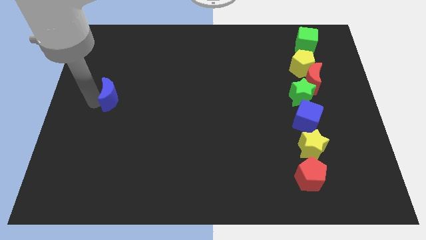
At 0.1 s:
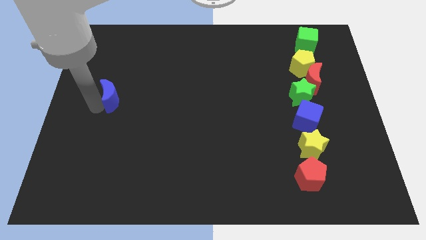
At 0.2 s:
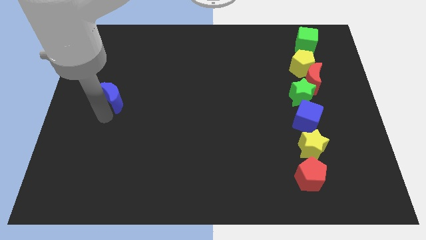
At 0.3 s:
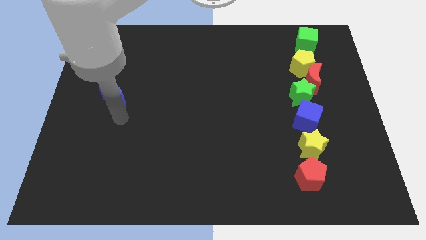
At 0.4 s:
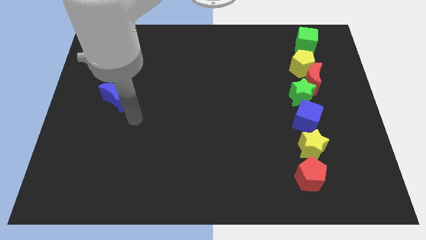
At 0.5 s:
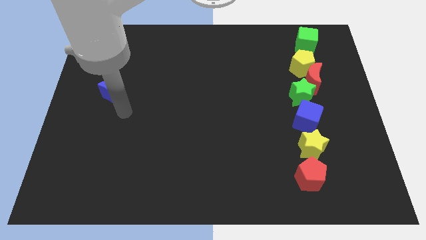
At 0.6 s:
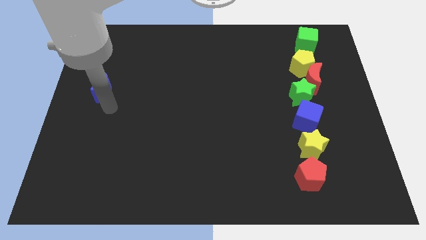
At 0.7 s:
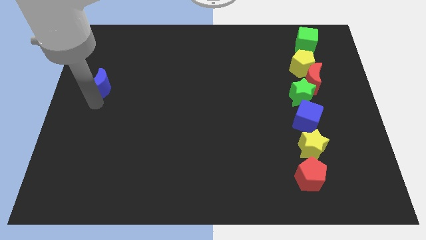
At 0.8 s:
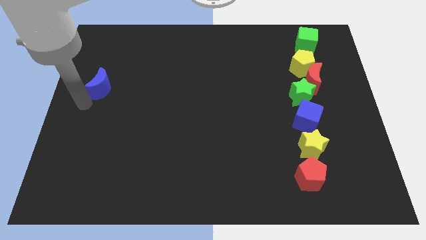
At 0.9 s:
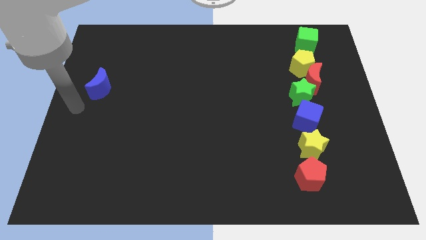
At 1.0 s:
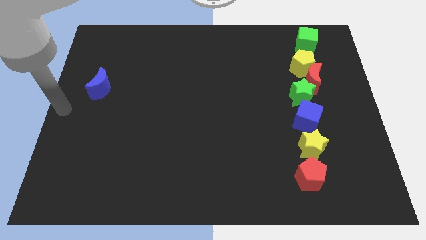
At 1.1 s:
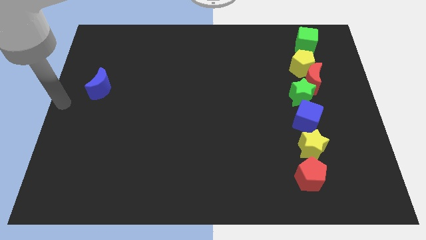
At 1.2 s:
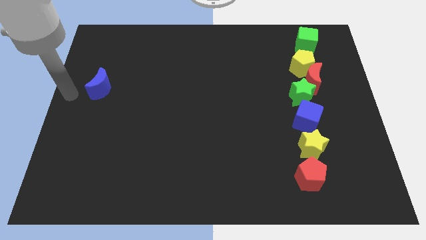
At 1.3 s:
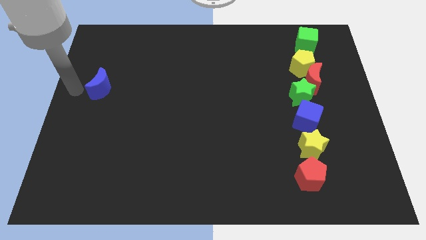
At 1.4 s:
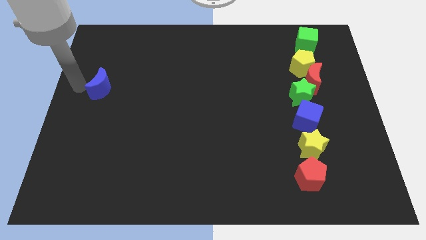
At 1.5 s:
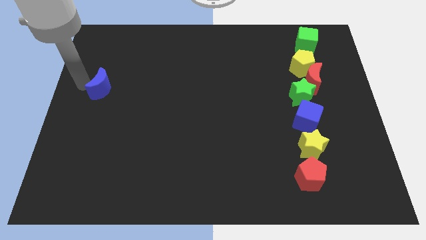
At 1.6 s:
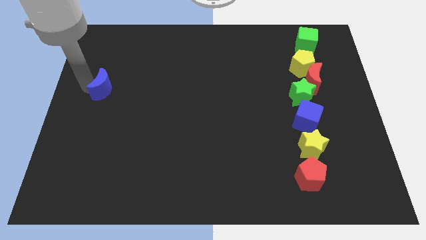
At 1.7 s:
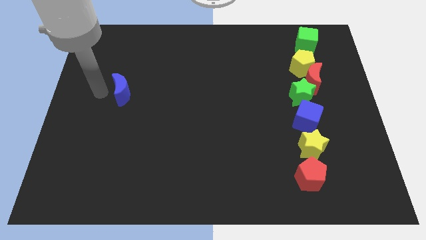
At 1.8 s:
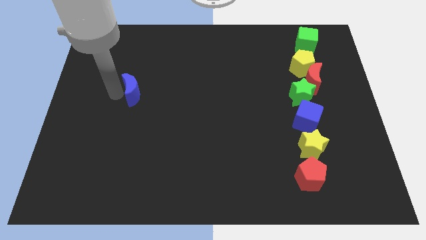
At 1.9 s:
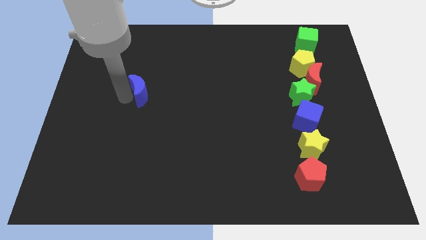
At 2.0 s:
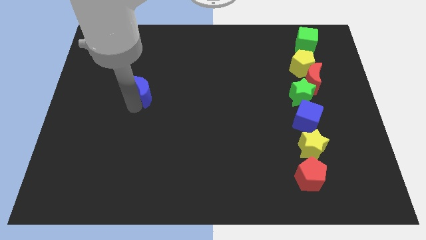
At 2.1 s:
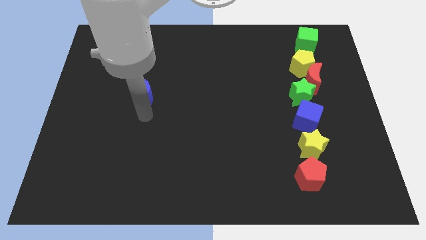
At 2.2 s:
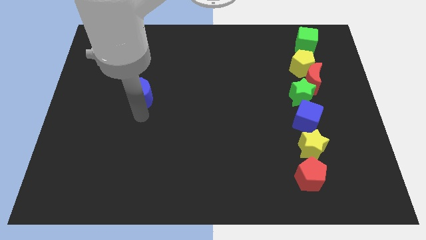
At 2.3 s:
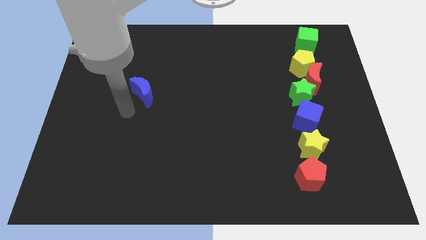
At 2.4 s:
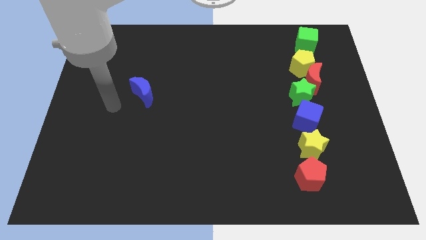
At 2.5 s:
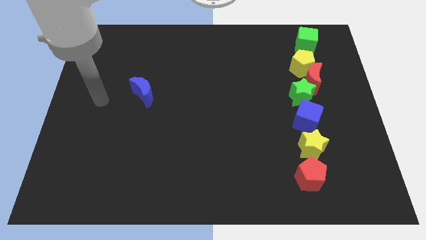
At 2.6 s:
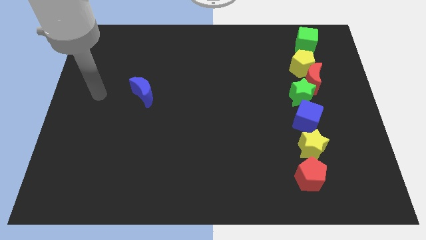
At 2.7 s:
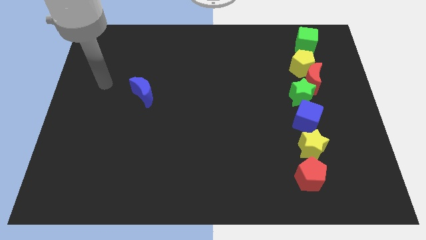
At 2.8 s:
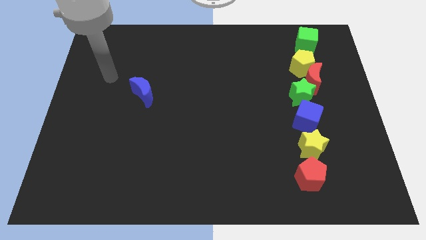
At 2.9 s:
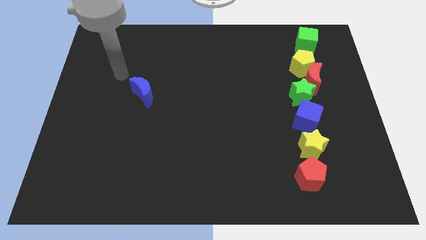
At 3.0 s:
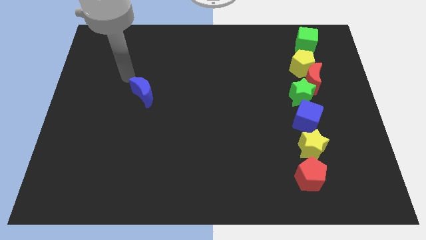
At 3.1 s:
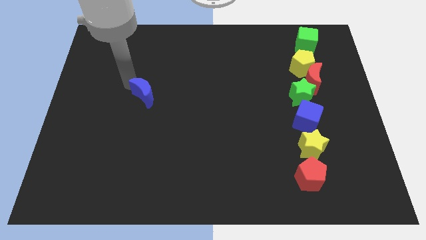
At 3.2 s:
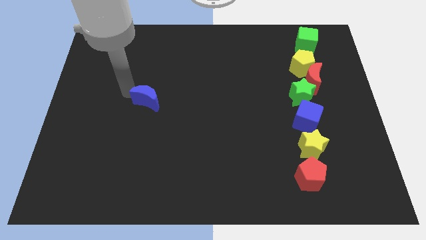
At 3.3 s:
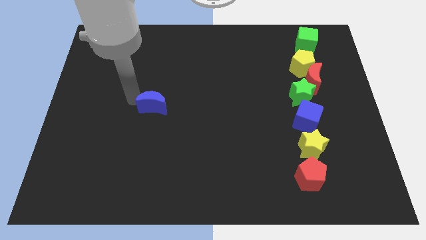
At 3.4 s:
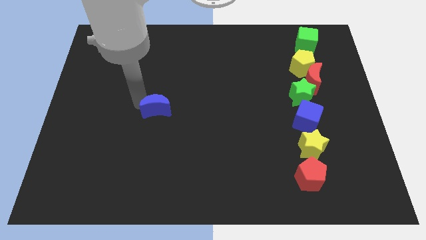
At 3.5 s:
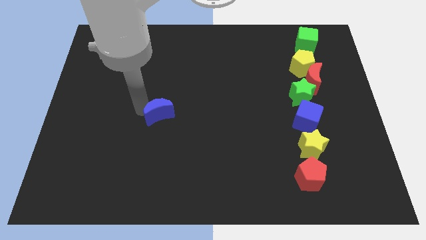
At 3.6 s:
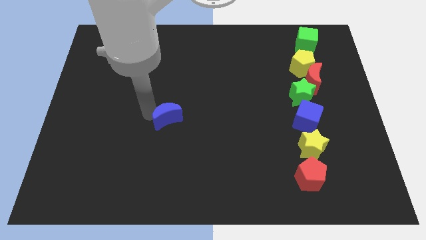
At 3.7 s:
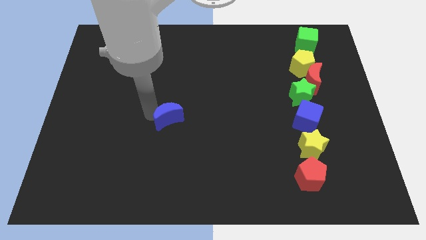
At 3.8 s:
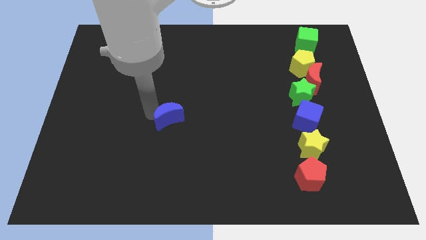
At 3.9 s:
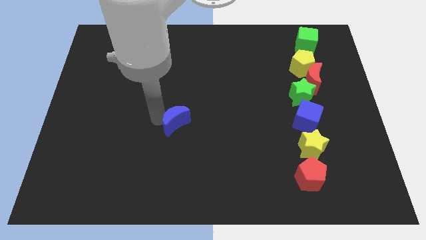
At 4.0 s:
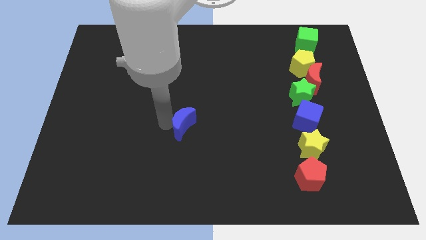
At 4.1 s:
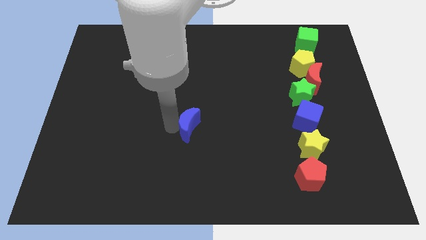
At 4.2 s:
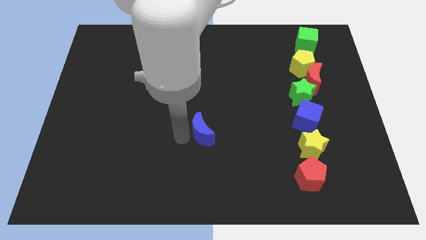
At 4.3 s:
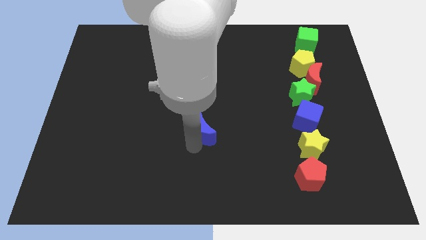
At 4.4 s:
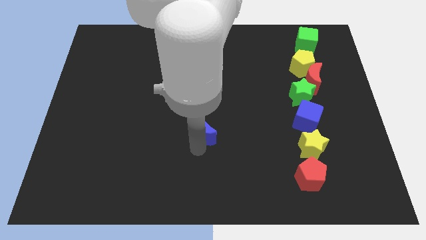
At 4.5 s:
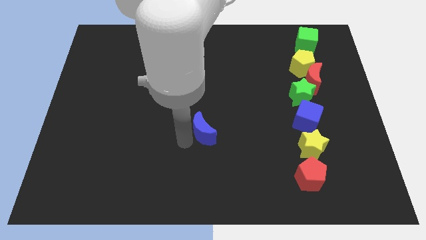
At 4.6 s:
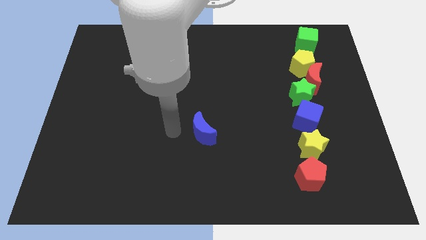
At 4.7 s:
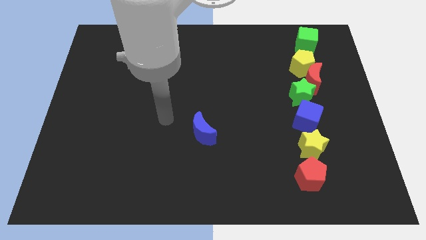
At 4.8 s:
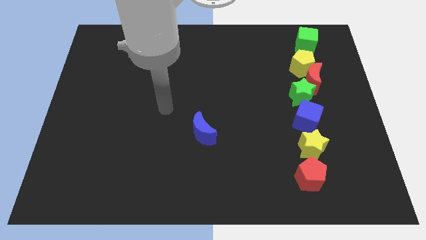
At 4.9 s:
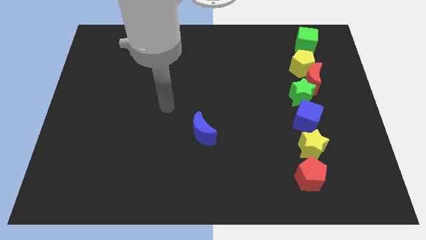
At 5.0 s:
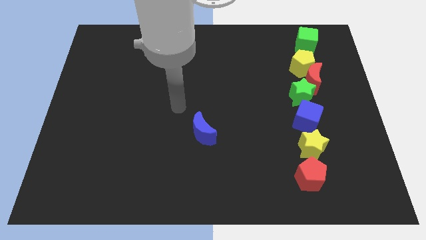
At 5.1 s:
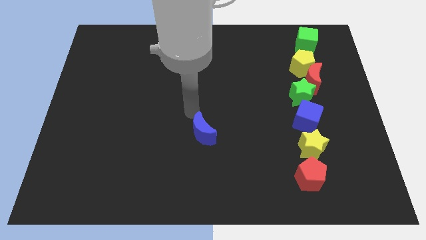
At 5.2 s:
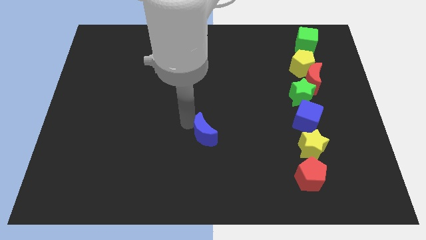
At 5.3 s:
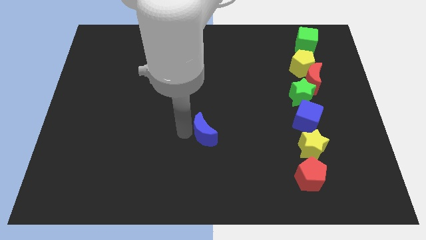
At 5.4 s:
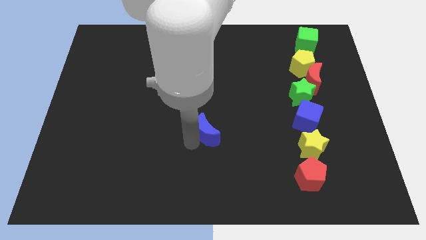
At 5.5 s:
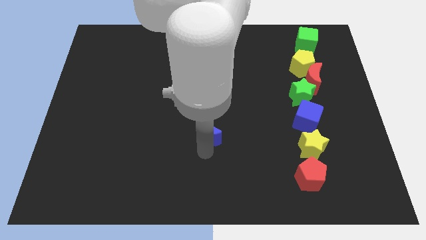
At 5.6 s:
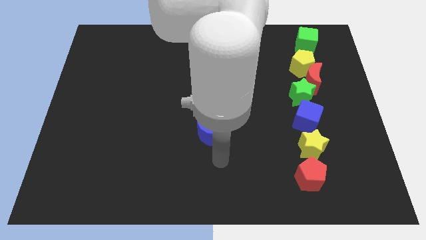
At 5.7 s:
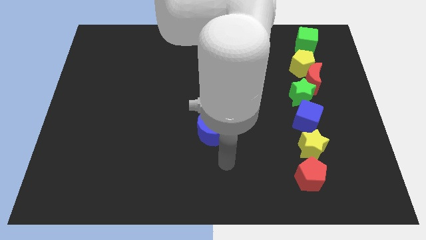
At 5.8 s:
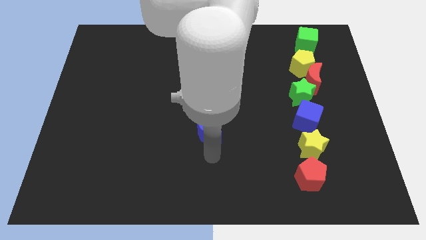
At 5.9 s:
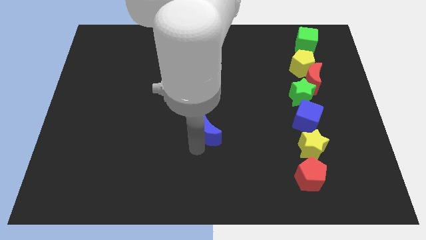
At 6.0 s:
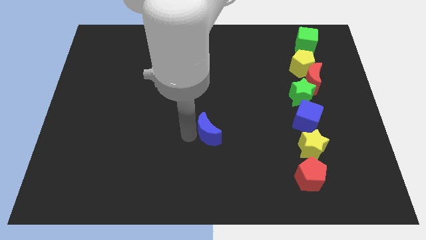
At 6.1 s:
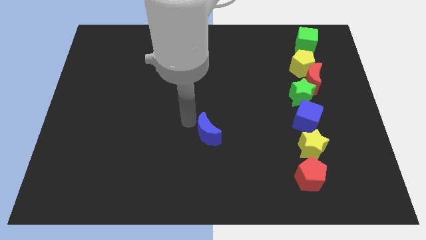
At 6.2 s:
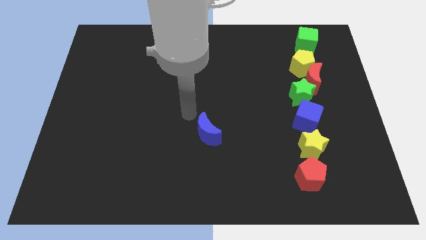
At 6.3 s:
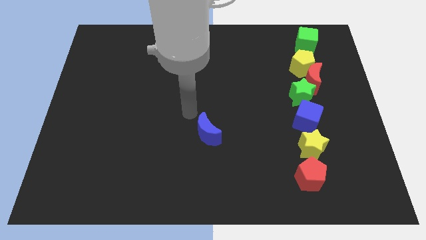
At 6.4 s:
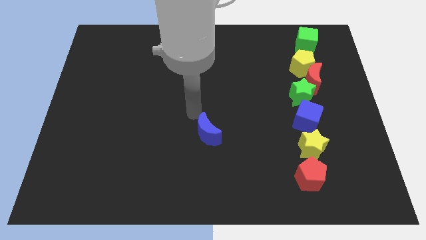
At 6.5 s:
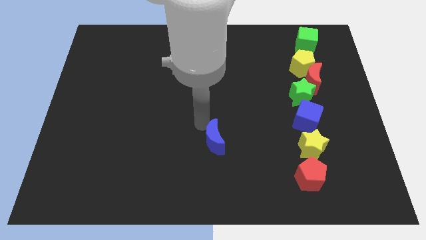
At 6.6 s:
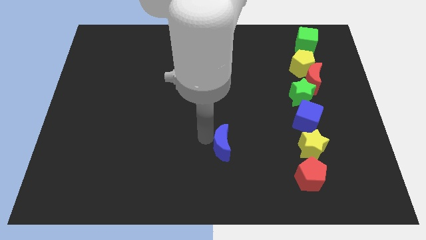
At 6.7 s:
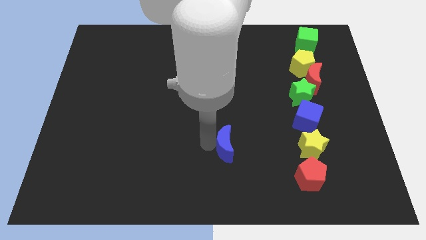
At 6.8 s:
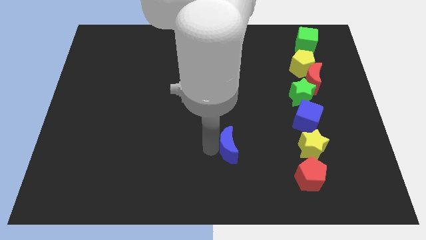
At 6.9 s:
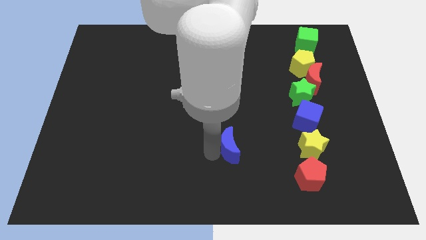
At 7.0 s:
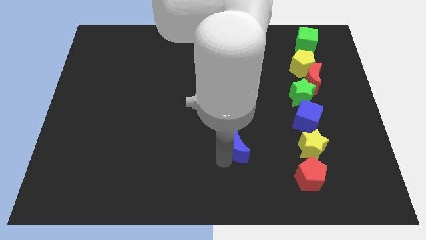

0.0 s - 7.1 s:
place the blue moon to the left side of the red pentagon

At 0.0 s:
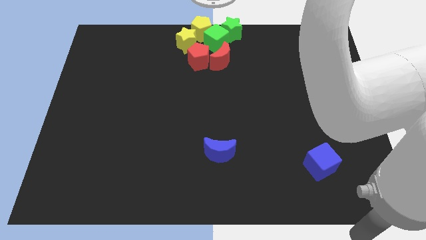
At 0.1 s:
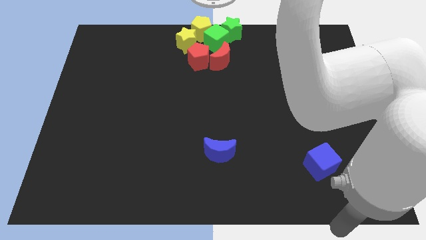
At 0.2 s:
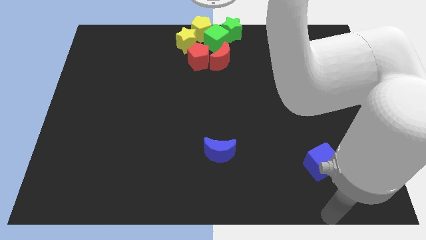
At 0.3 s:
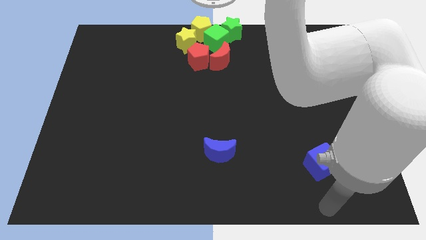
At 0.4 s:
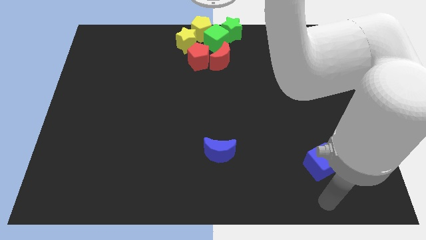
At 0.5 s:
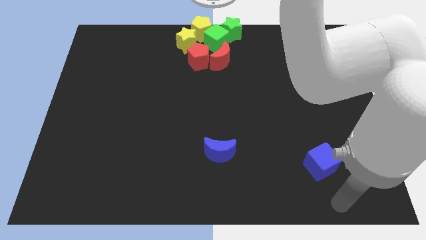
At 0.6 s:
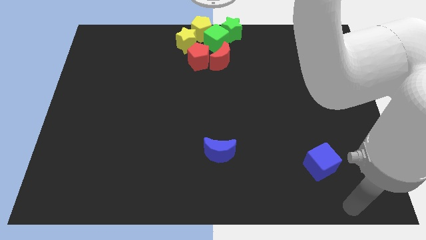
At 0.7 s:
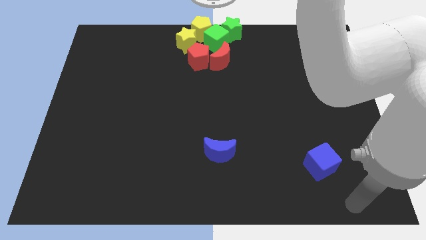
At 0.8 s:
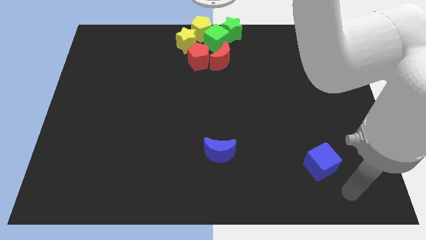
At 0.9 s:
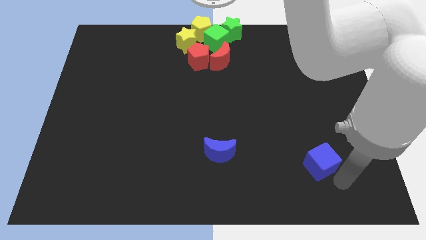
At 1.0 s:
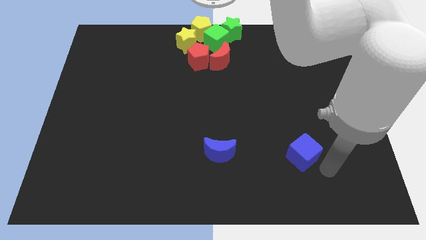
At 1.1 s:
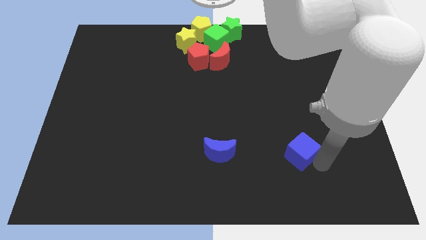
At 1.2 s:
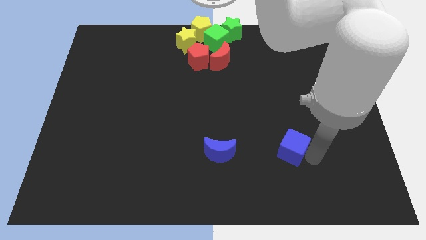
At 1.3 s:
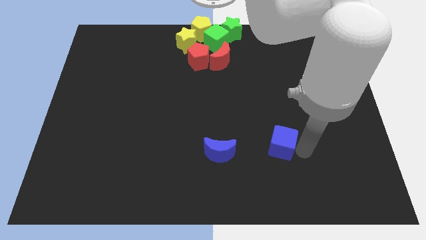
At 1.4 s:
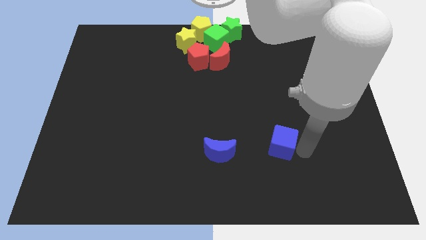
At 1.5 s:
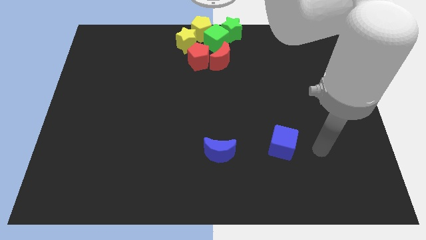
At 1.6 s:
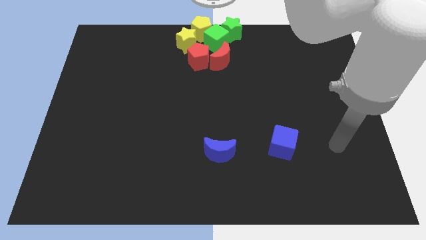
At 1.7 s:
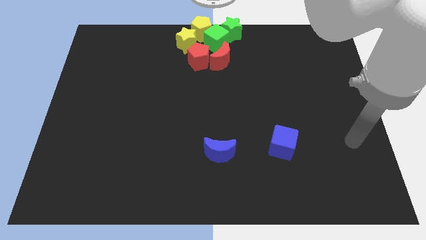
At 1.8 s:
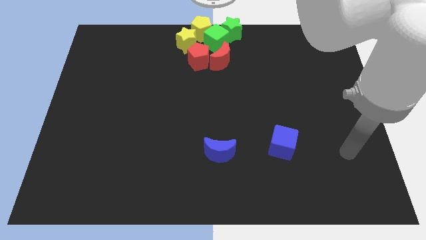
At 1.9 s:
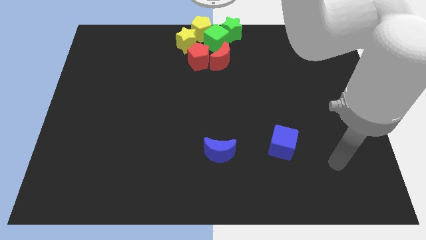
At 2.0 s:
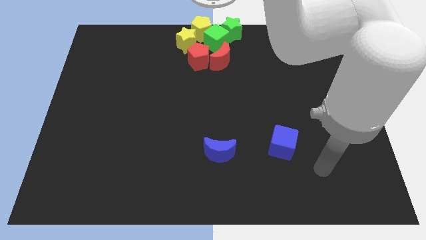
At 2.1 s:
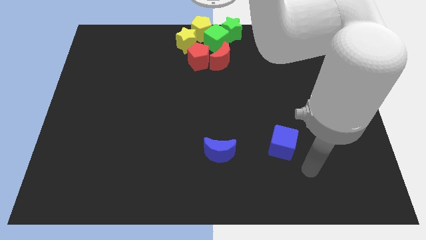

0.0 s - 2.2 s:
move the blue cube horizontally right to the blue moon
